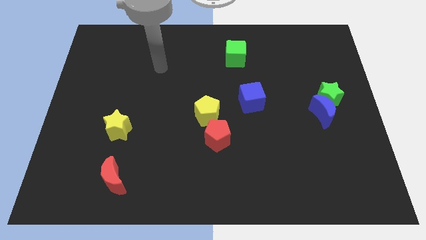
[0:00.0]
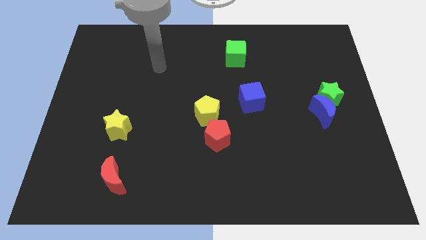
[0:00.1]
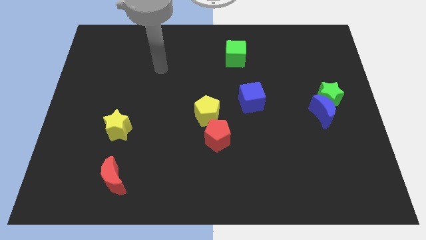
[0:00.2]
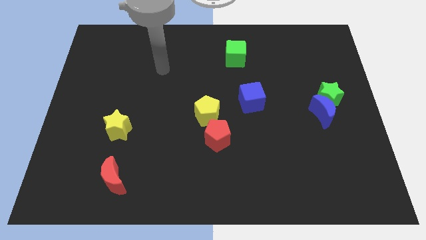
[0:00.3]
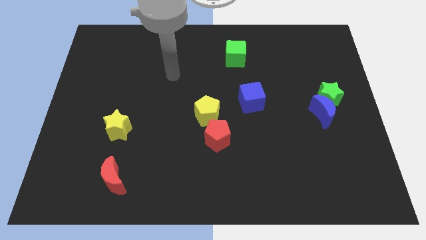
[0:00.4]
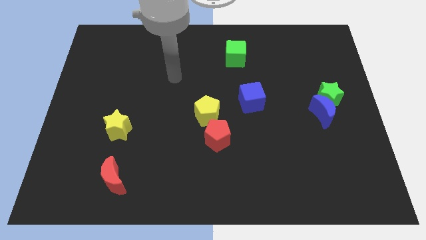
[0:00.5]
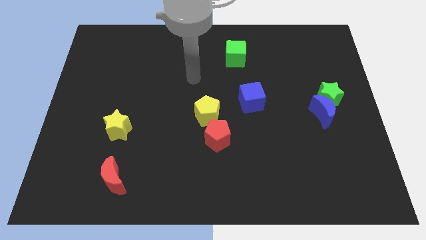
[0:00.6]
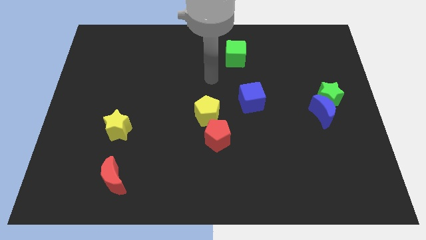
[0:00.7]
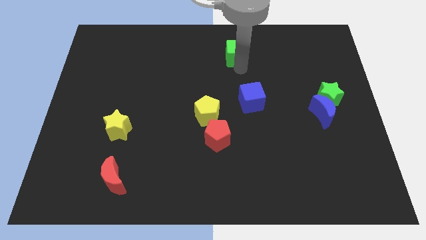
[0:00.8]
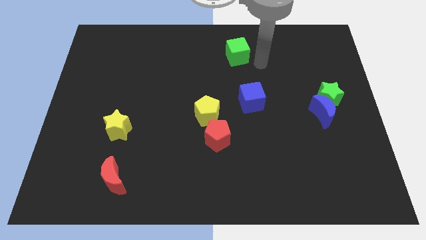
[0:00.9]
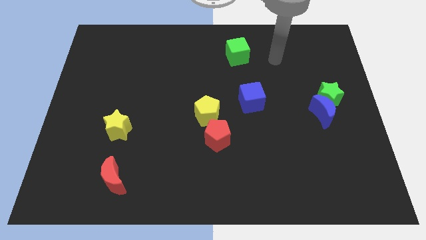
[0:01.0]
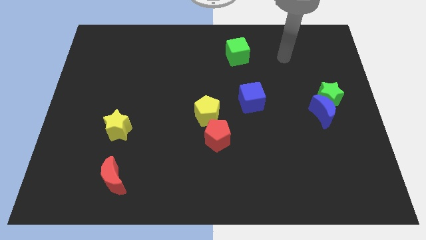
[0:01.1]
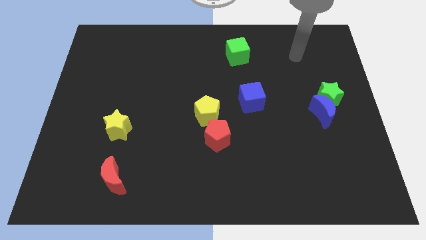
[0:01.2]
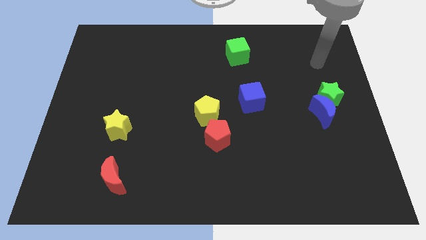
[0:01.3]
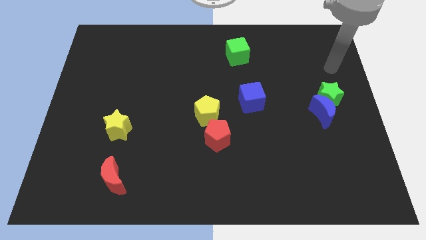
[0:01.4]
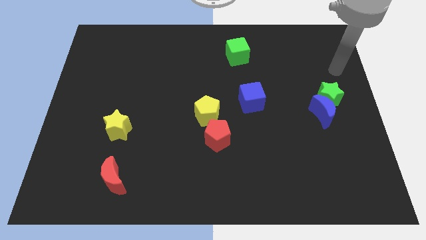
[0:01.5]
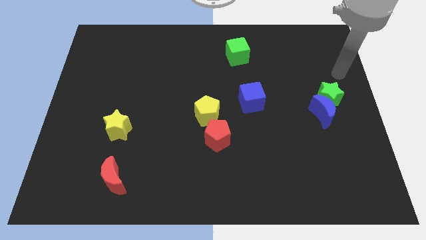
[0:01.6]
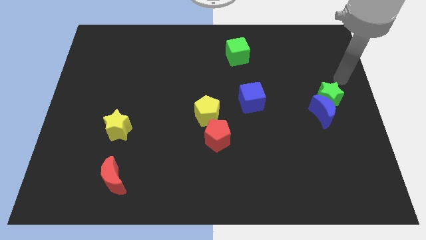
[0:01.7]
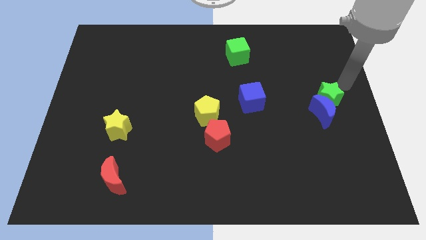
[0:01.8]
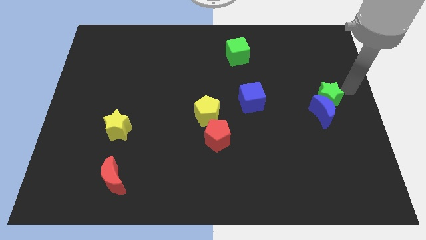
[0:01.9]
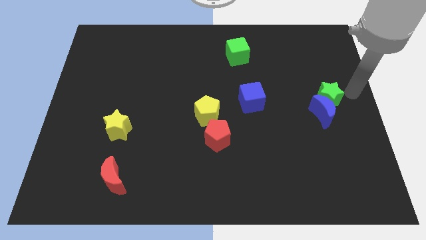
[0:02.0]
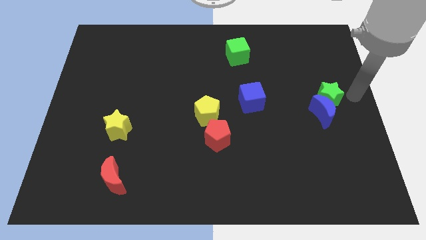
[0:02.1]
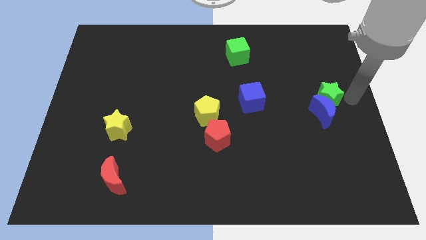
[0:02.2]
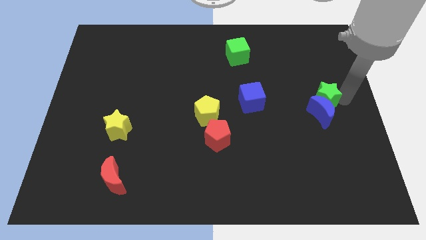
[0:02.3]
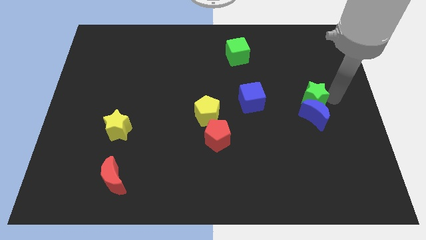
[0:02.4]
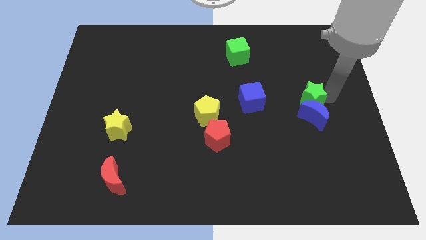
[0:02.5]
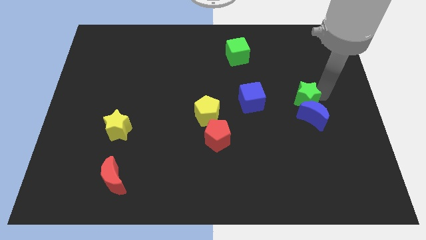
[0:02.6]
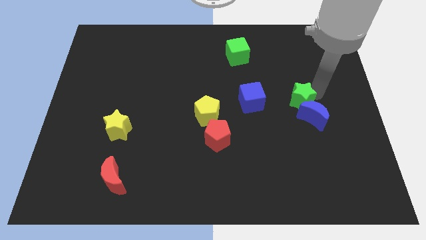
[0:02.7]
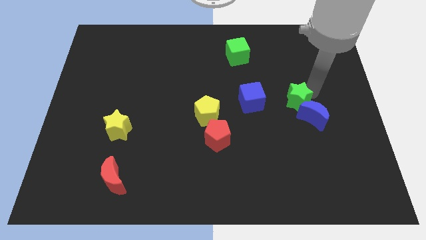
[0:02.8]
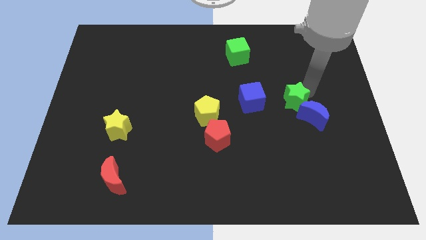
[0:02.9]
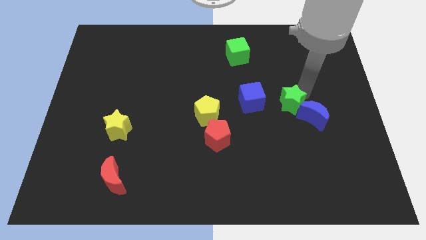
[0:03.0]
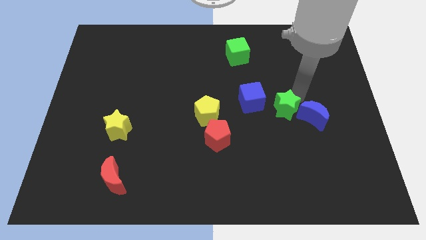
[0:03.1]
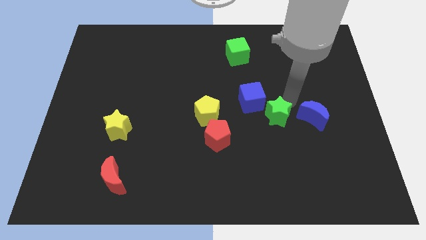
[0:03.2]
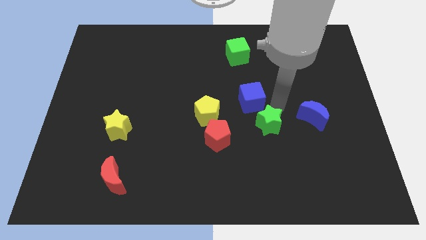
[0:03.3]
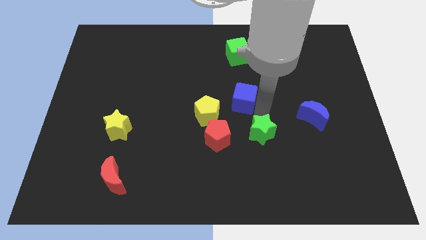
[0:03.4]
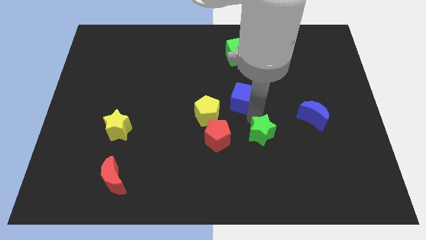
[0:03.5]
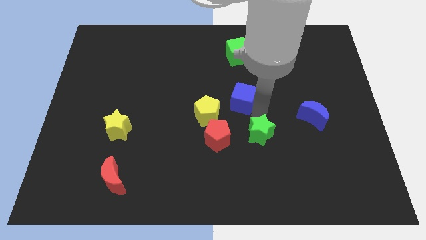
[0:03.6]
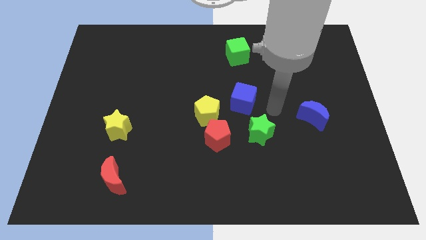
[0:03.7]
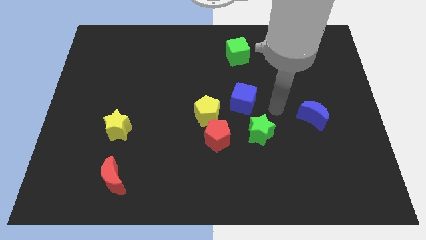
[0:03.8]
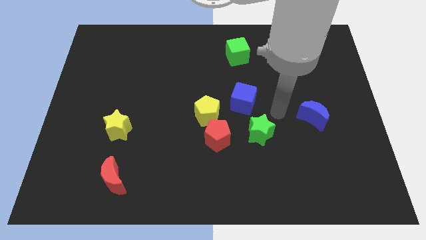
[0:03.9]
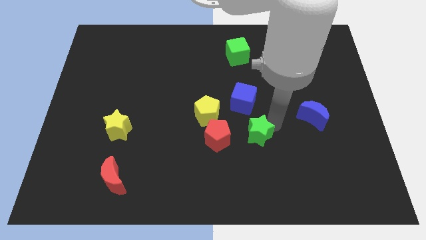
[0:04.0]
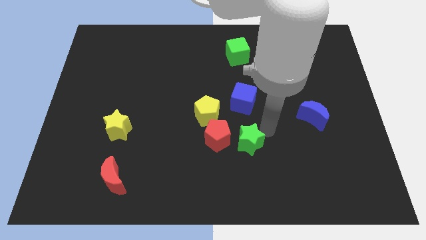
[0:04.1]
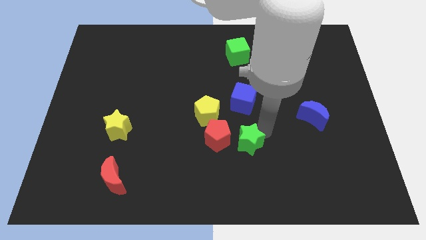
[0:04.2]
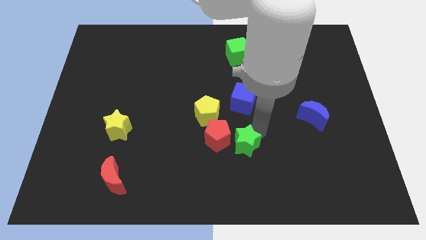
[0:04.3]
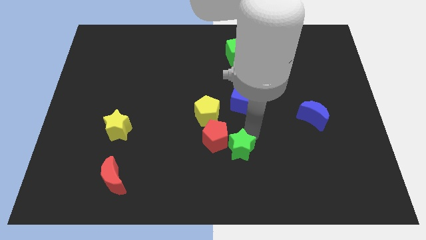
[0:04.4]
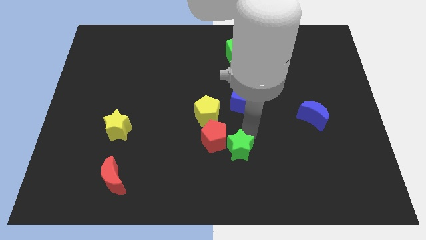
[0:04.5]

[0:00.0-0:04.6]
push the green star to the red pentagon

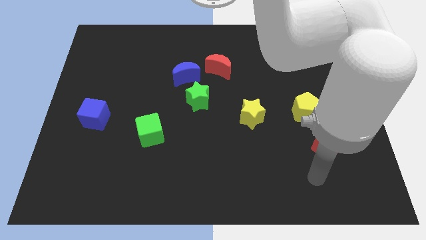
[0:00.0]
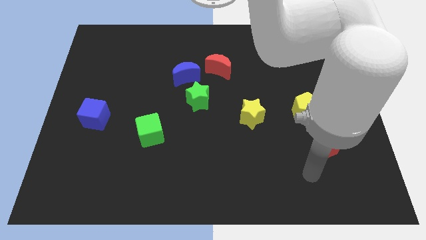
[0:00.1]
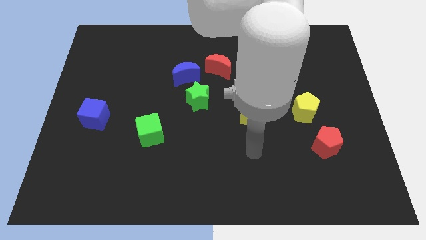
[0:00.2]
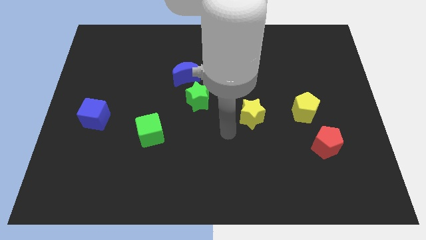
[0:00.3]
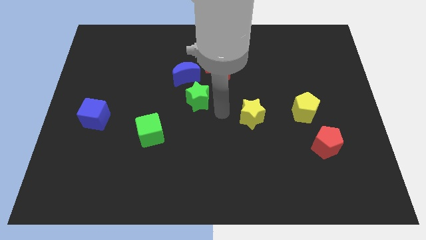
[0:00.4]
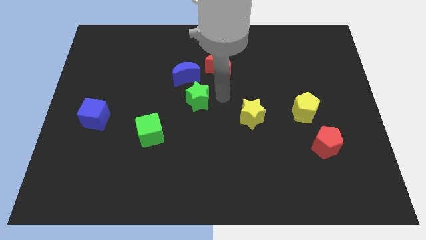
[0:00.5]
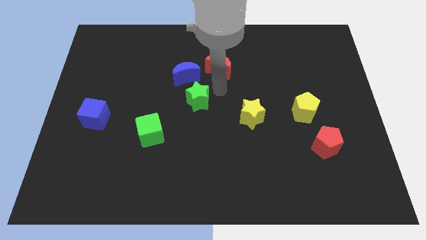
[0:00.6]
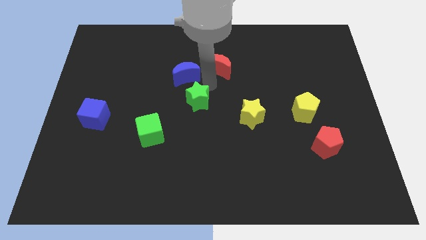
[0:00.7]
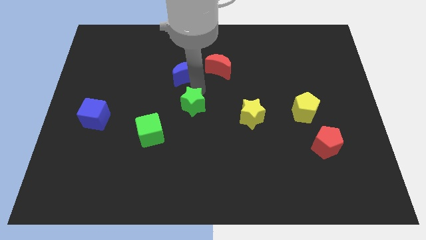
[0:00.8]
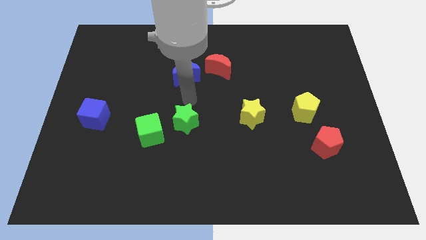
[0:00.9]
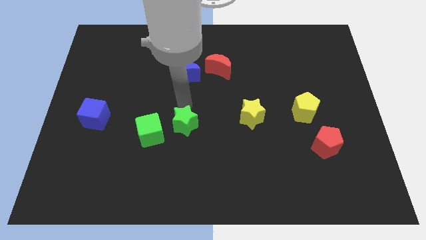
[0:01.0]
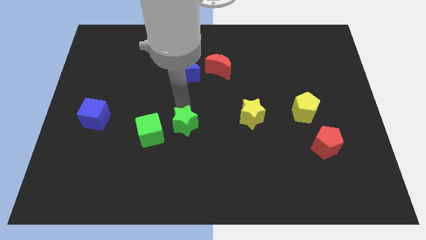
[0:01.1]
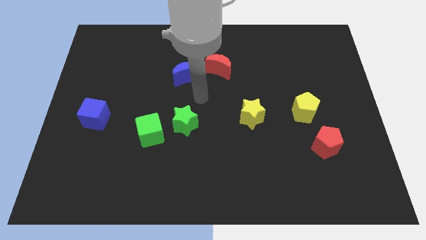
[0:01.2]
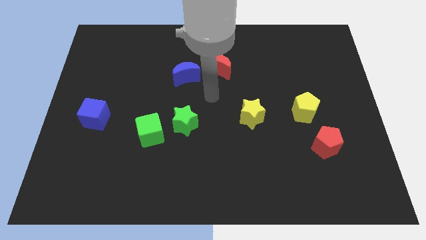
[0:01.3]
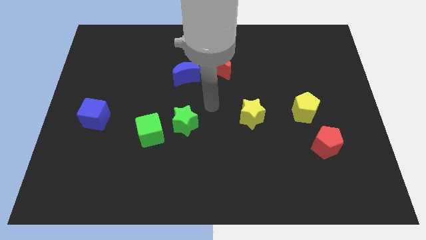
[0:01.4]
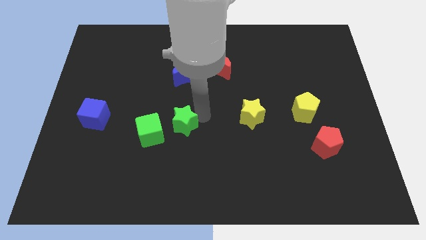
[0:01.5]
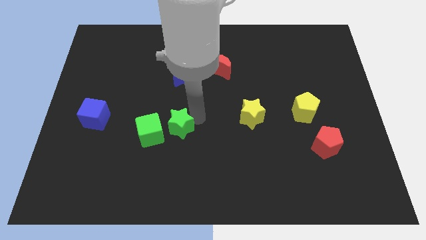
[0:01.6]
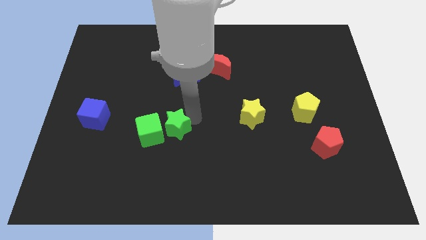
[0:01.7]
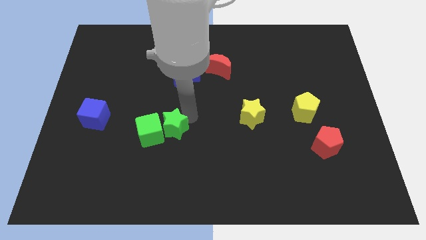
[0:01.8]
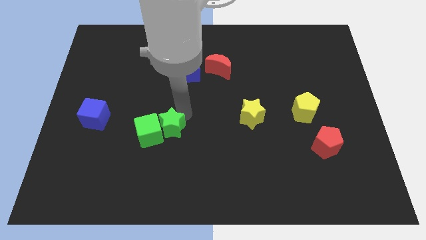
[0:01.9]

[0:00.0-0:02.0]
slide the green star to the green cube

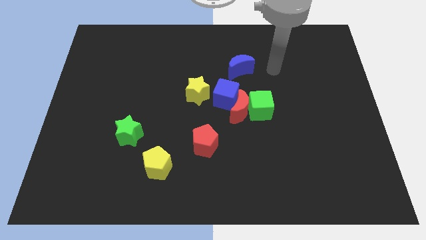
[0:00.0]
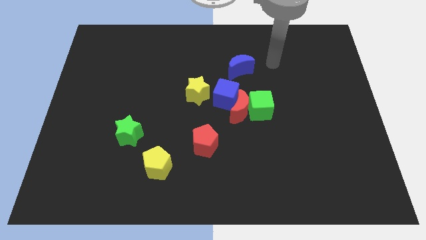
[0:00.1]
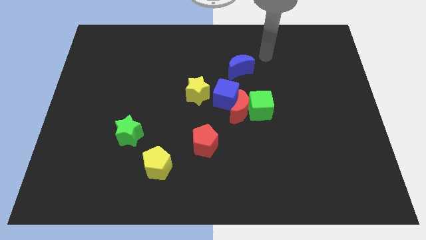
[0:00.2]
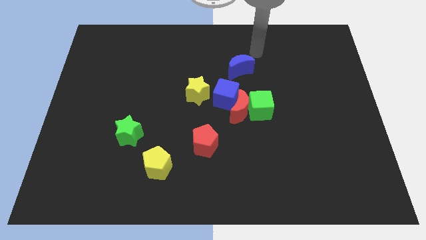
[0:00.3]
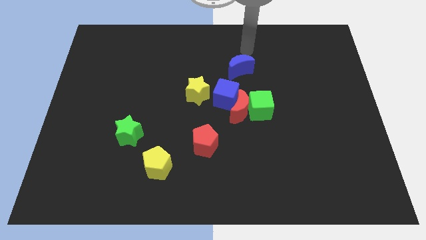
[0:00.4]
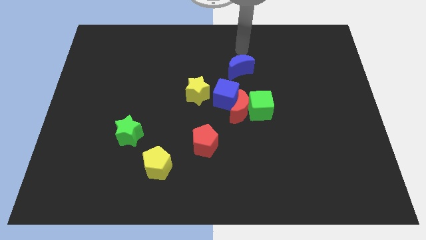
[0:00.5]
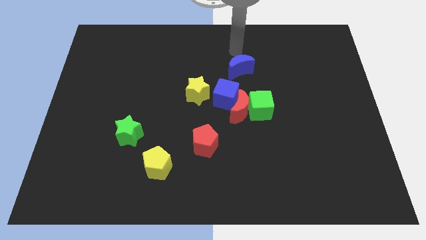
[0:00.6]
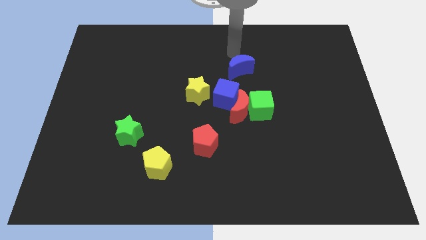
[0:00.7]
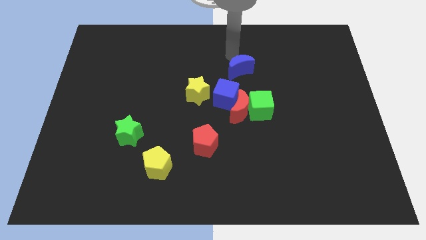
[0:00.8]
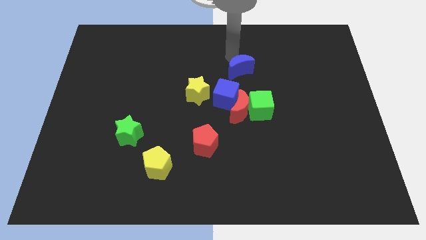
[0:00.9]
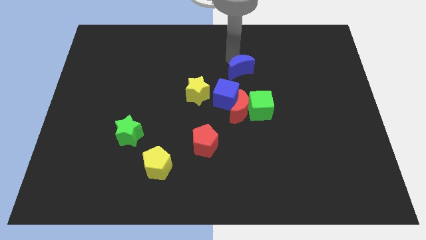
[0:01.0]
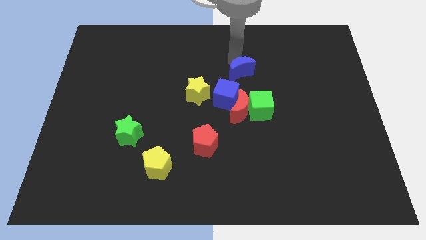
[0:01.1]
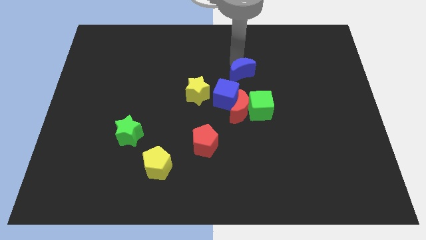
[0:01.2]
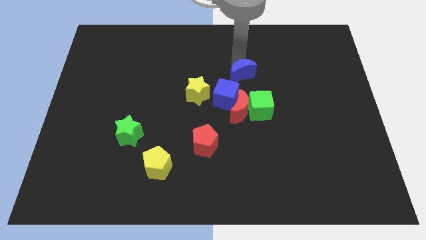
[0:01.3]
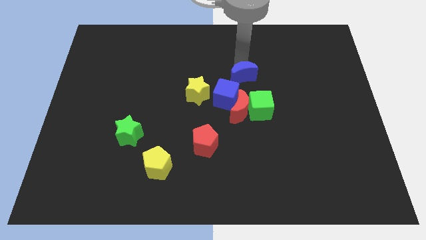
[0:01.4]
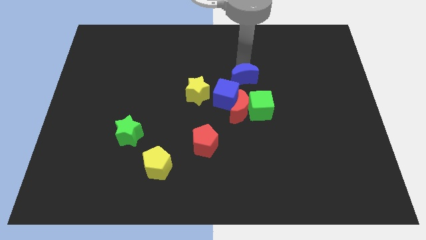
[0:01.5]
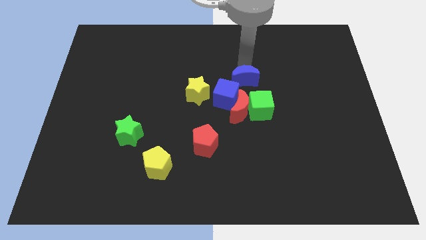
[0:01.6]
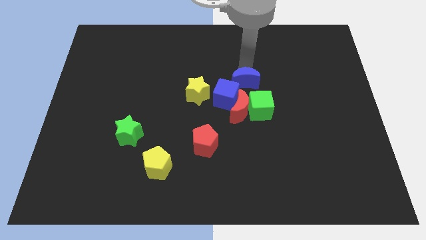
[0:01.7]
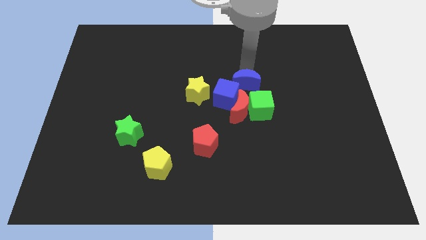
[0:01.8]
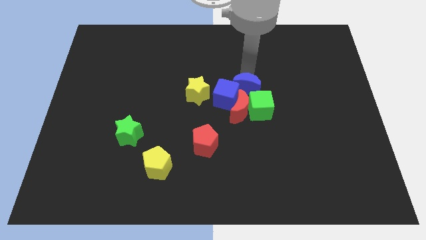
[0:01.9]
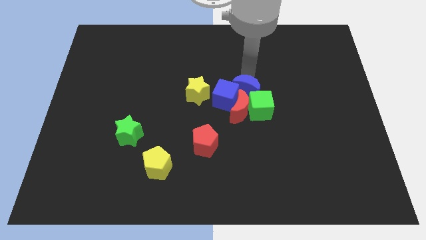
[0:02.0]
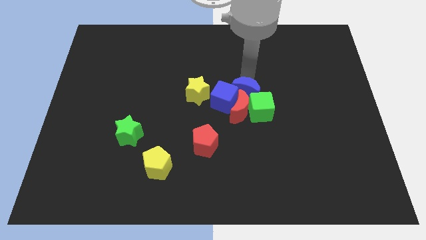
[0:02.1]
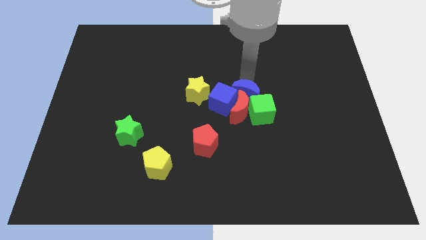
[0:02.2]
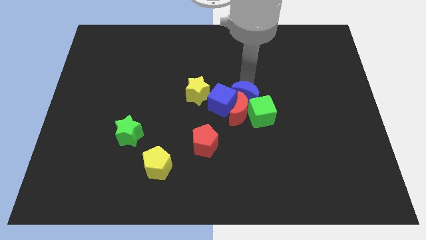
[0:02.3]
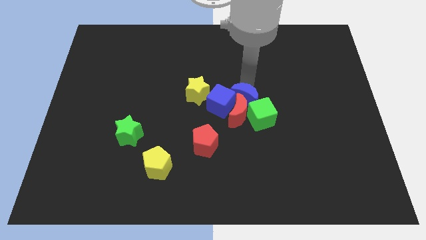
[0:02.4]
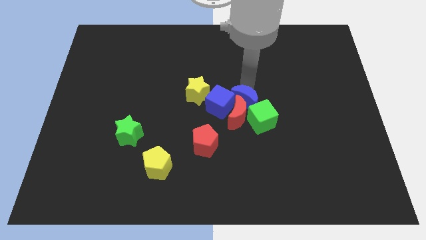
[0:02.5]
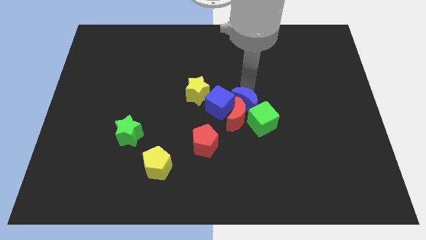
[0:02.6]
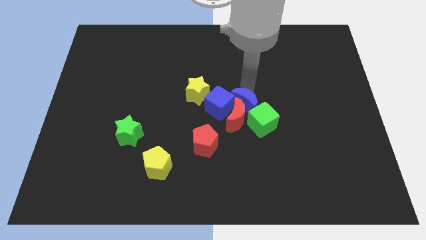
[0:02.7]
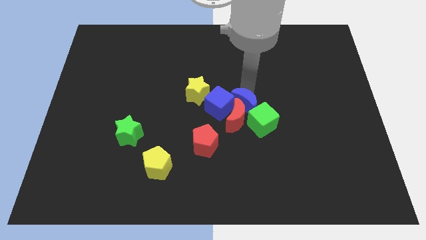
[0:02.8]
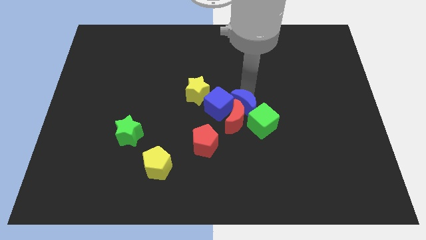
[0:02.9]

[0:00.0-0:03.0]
slide the blue moon to the green cube
